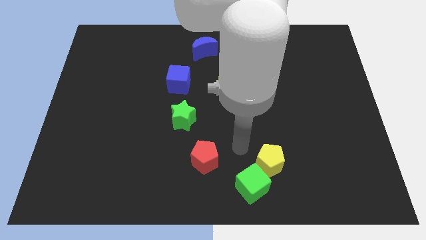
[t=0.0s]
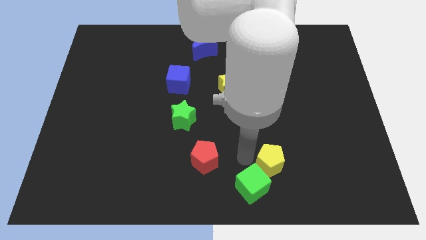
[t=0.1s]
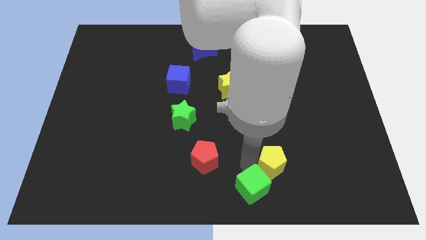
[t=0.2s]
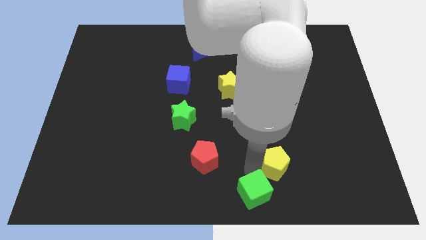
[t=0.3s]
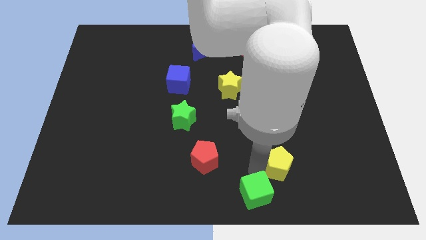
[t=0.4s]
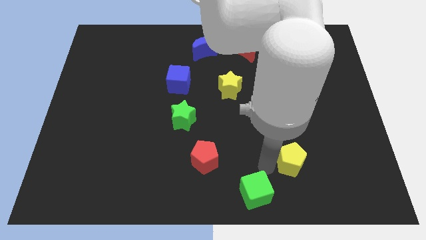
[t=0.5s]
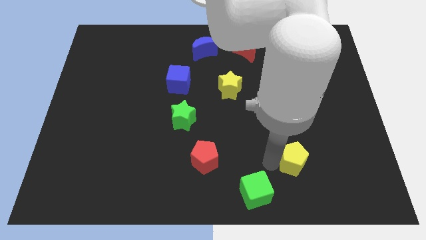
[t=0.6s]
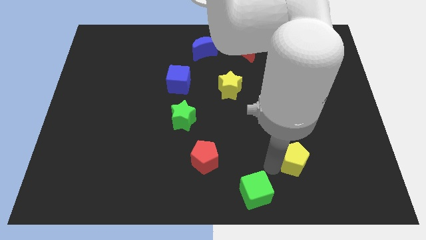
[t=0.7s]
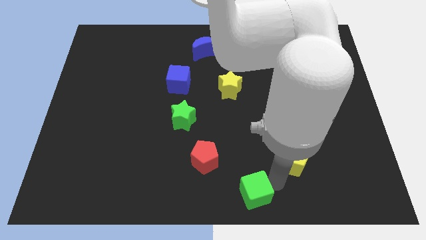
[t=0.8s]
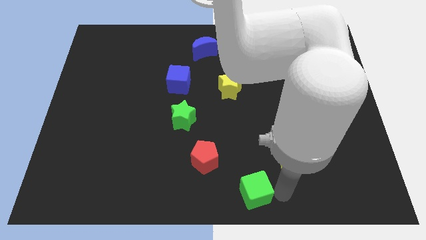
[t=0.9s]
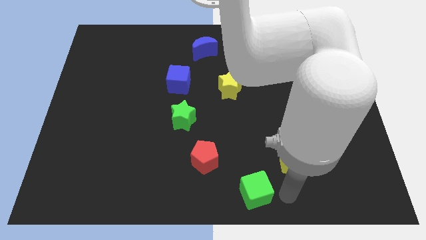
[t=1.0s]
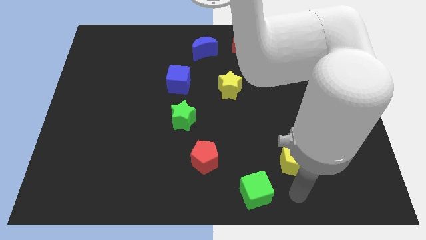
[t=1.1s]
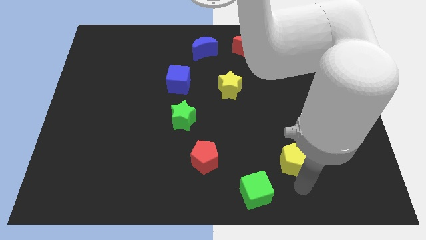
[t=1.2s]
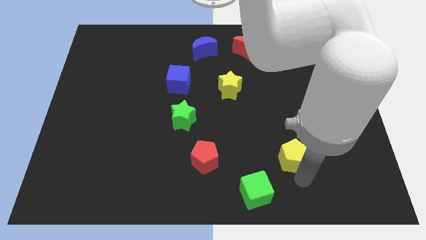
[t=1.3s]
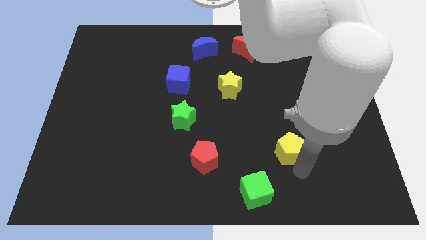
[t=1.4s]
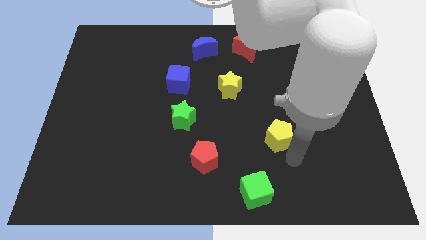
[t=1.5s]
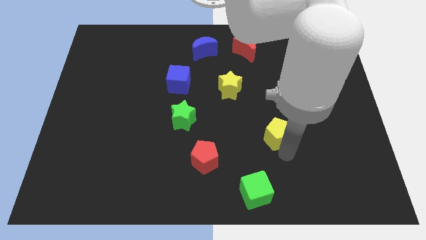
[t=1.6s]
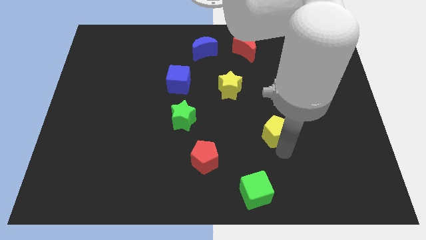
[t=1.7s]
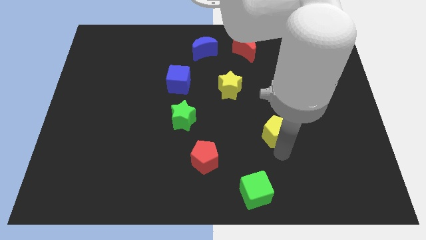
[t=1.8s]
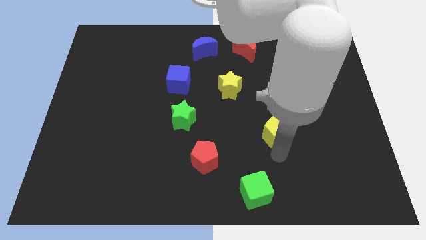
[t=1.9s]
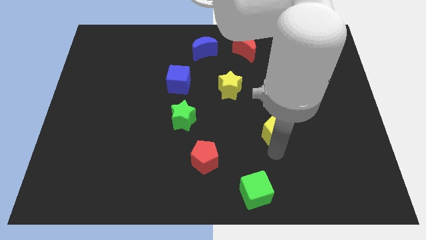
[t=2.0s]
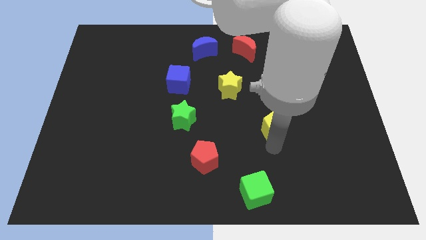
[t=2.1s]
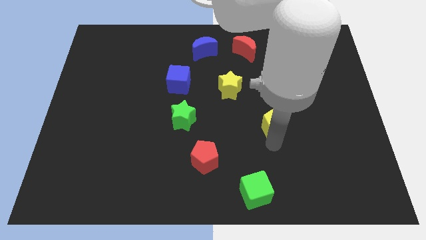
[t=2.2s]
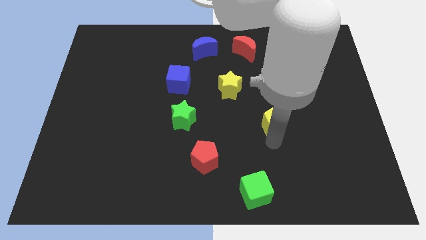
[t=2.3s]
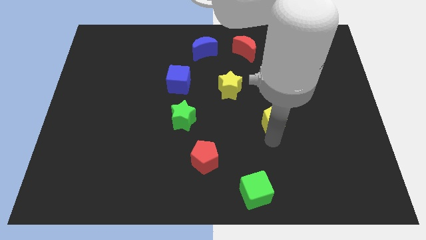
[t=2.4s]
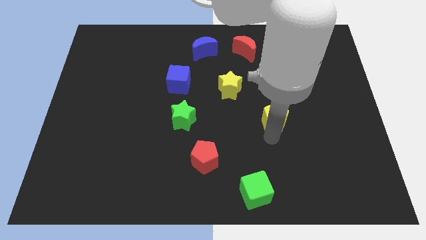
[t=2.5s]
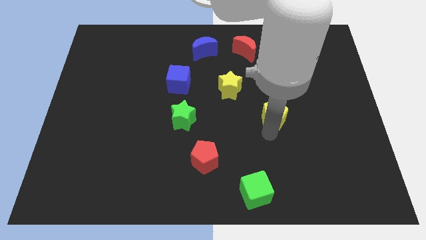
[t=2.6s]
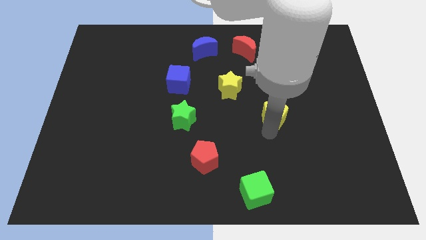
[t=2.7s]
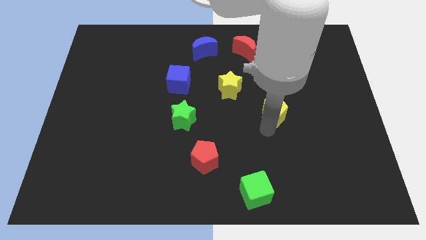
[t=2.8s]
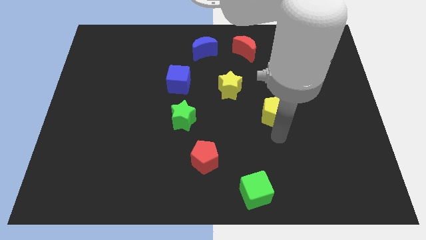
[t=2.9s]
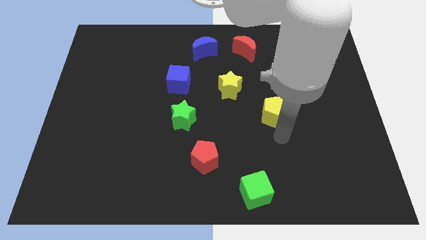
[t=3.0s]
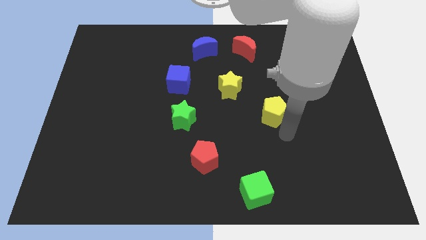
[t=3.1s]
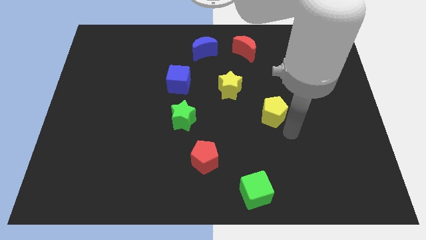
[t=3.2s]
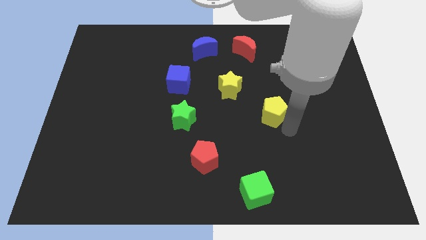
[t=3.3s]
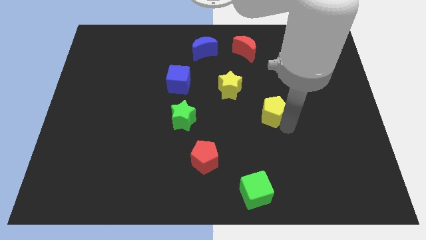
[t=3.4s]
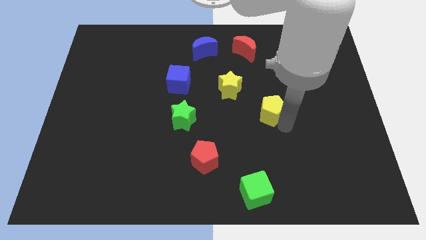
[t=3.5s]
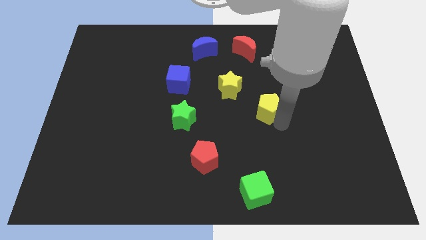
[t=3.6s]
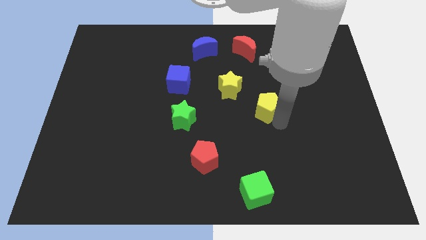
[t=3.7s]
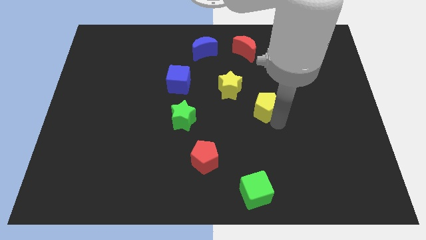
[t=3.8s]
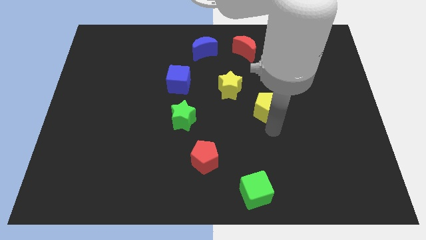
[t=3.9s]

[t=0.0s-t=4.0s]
place the yellow pentagon below the yellow star

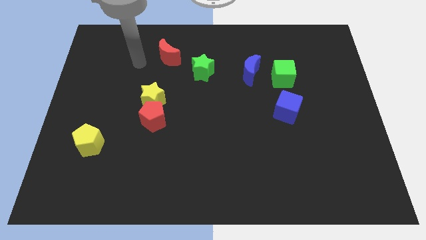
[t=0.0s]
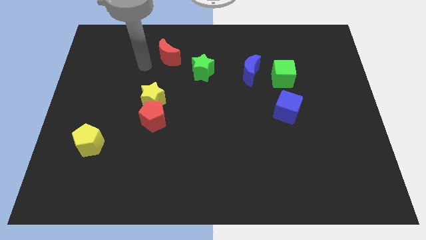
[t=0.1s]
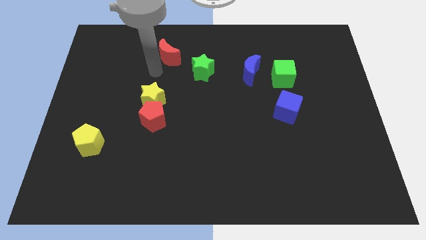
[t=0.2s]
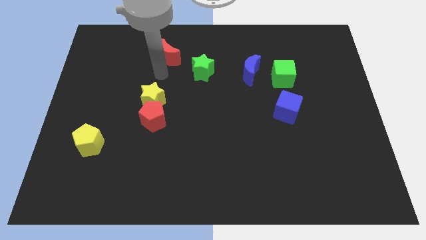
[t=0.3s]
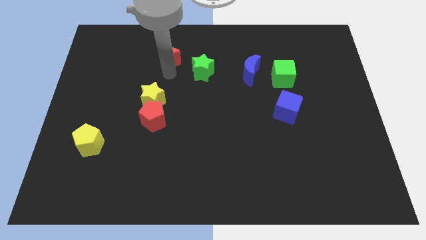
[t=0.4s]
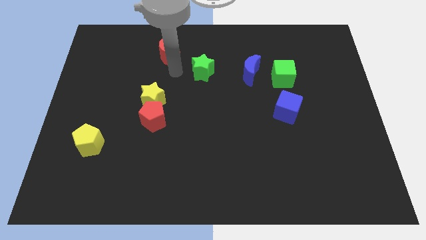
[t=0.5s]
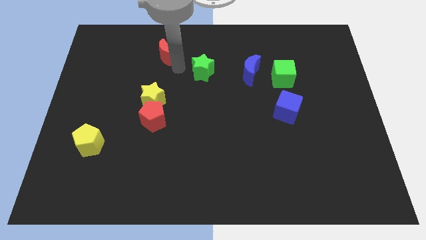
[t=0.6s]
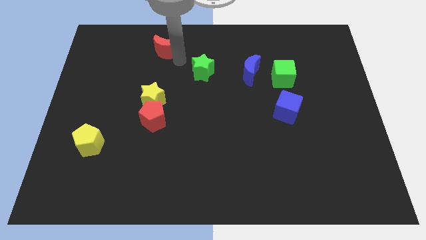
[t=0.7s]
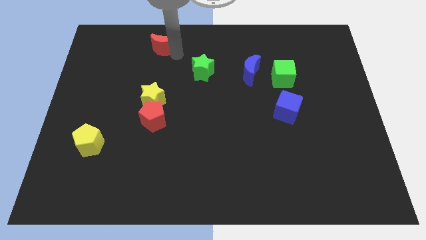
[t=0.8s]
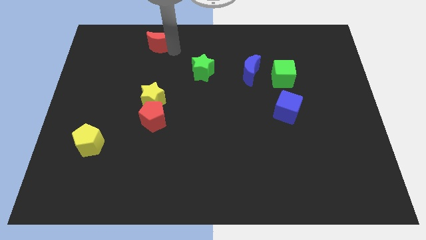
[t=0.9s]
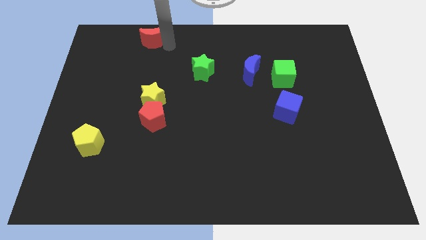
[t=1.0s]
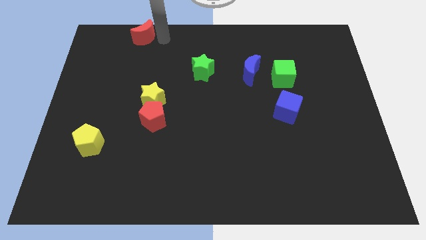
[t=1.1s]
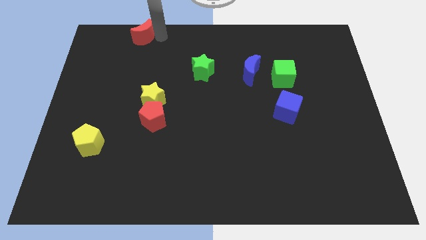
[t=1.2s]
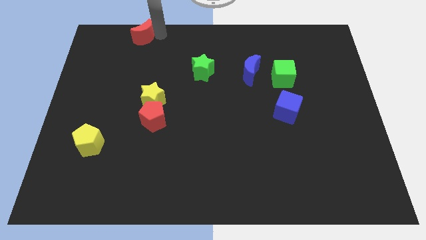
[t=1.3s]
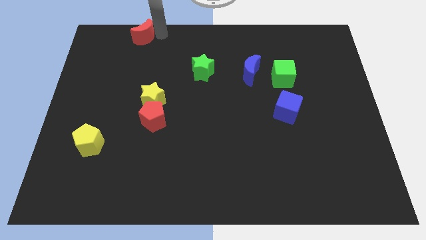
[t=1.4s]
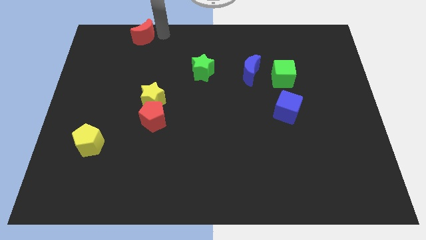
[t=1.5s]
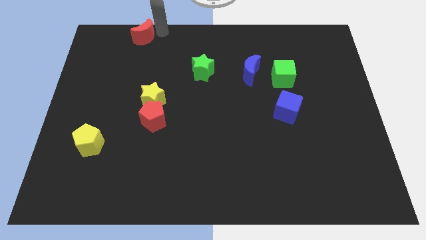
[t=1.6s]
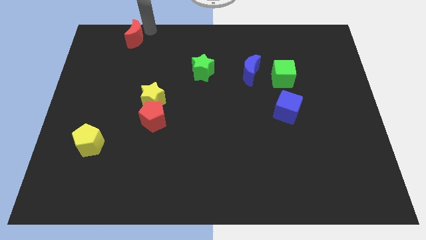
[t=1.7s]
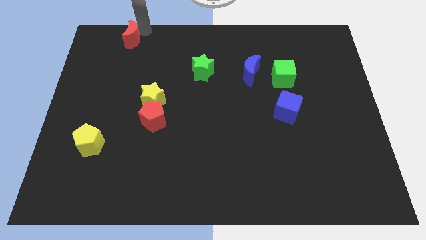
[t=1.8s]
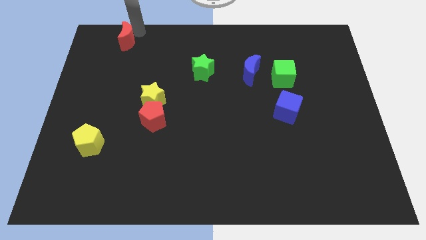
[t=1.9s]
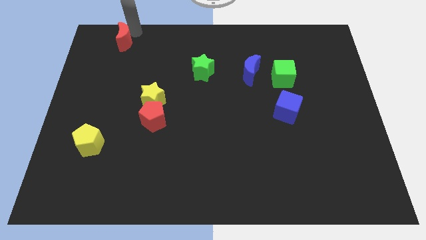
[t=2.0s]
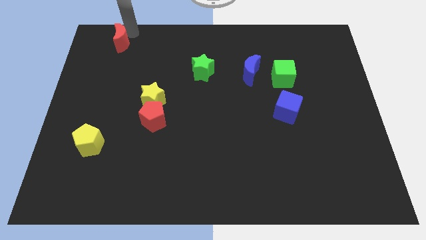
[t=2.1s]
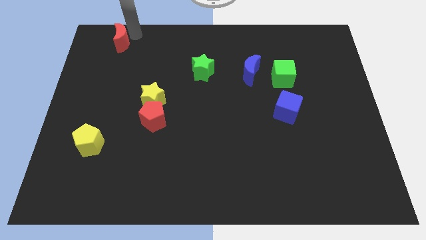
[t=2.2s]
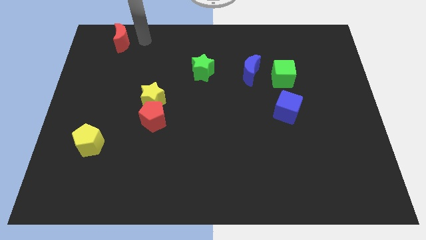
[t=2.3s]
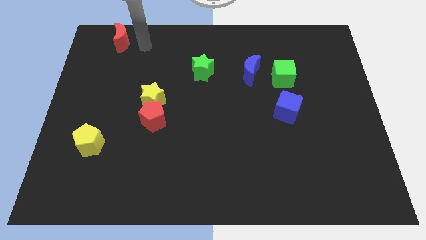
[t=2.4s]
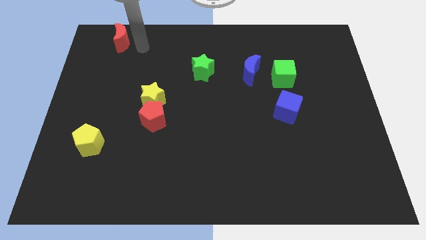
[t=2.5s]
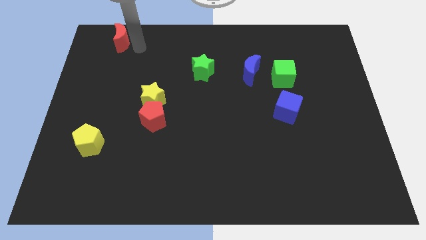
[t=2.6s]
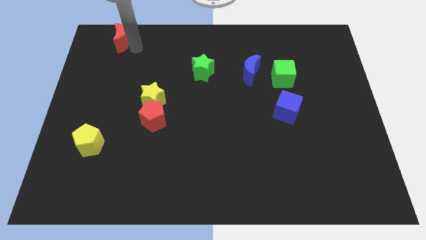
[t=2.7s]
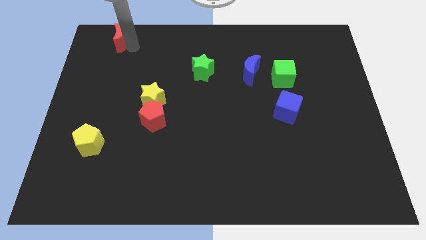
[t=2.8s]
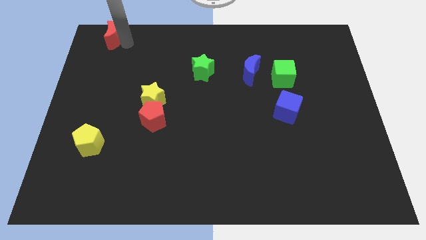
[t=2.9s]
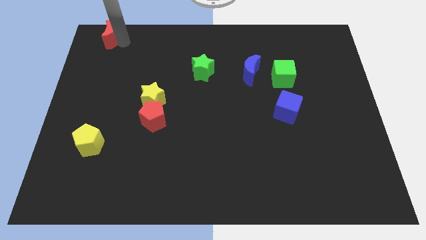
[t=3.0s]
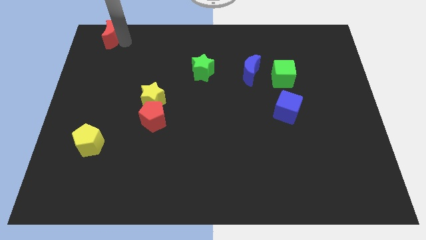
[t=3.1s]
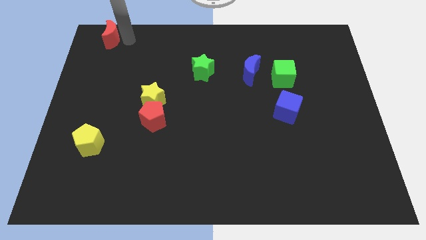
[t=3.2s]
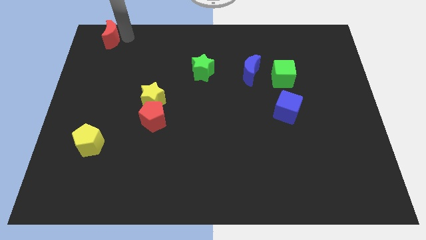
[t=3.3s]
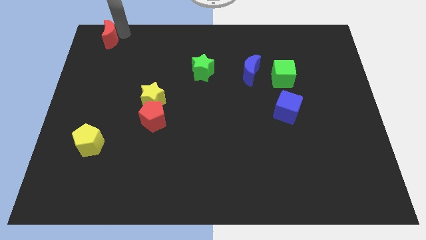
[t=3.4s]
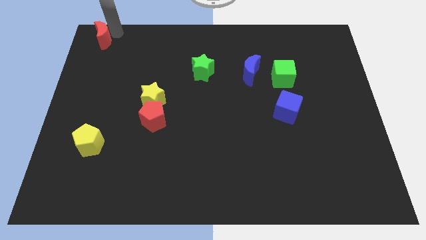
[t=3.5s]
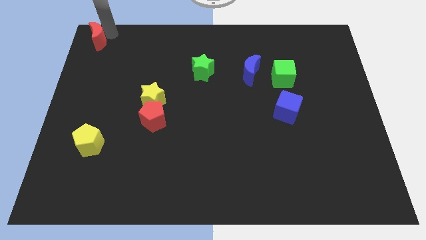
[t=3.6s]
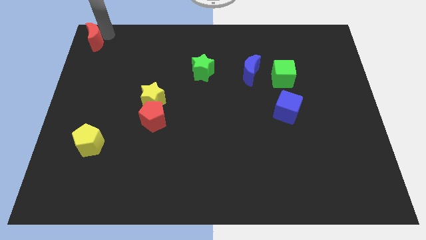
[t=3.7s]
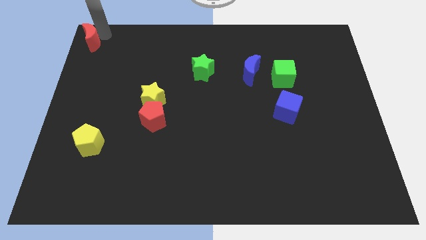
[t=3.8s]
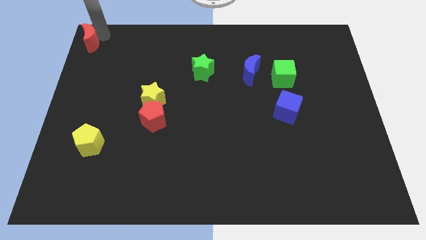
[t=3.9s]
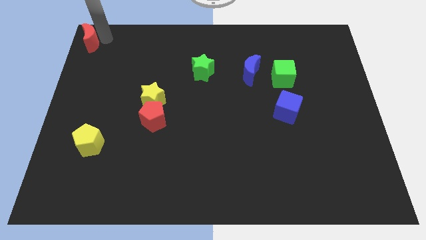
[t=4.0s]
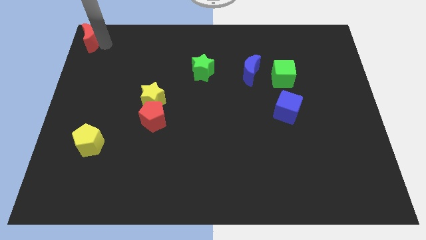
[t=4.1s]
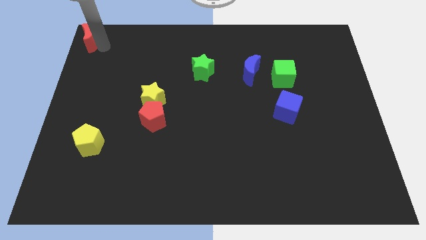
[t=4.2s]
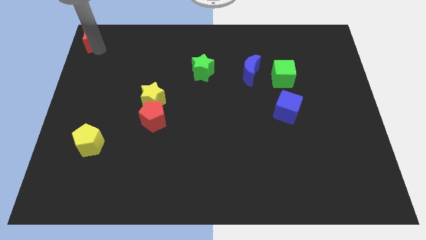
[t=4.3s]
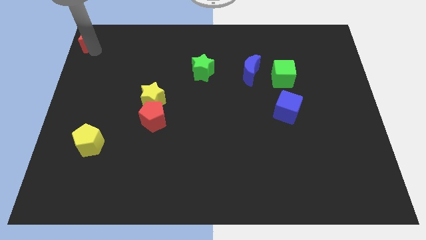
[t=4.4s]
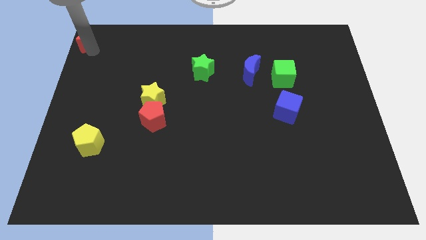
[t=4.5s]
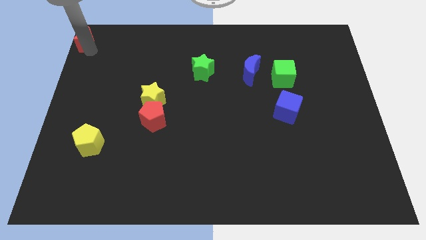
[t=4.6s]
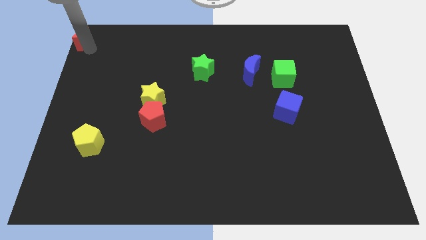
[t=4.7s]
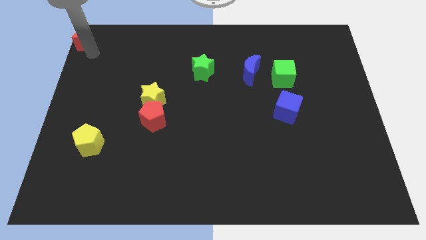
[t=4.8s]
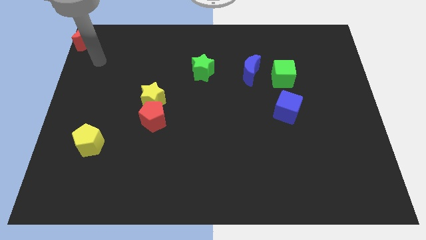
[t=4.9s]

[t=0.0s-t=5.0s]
move the red crescent to the top left of the board
